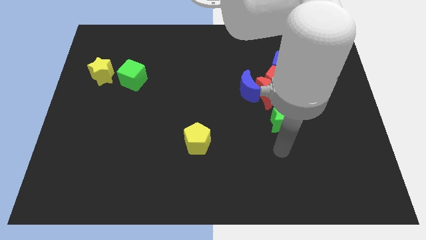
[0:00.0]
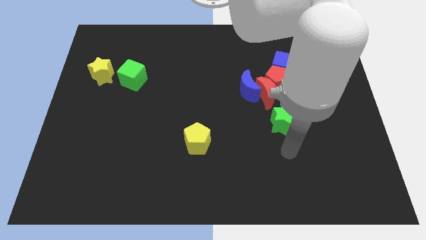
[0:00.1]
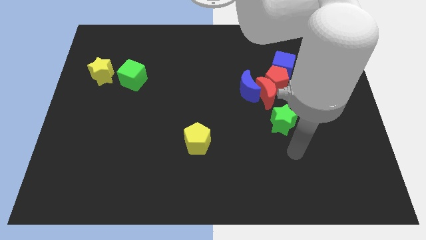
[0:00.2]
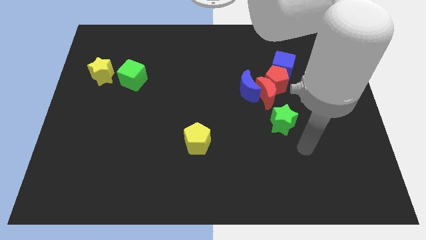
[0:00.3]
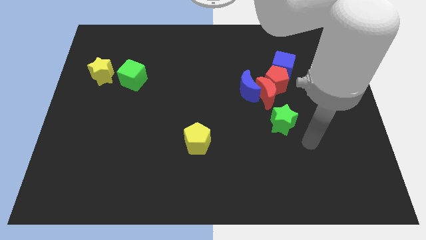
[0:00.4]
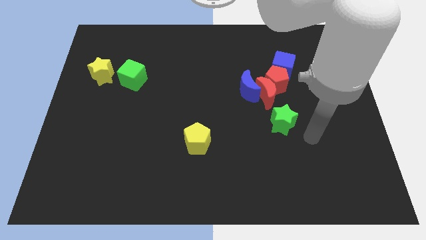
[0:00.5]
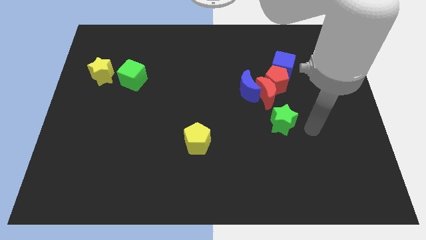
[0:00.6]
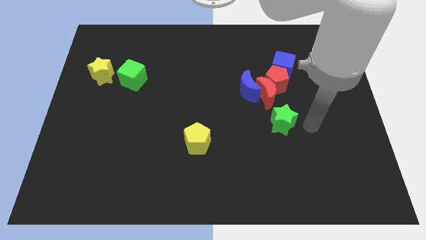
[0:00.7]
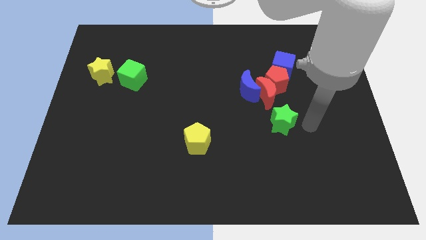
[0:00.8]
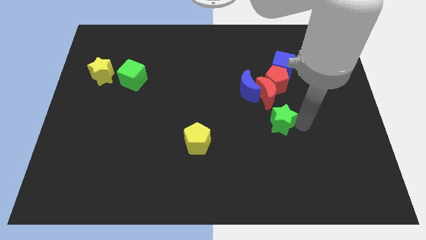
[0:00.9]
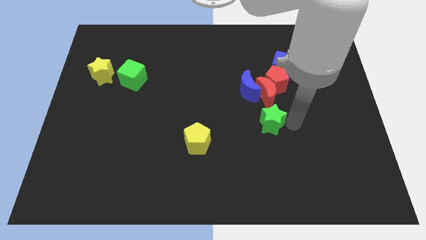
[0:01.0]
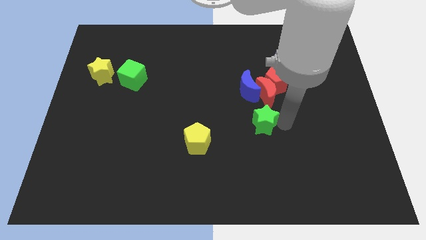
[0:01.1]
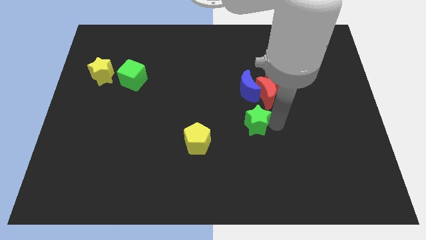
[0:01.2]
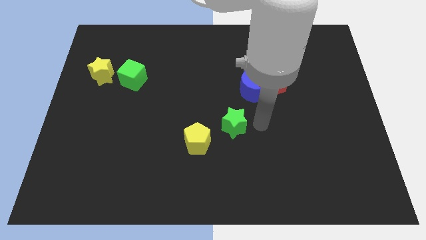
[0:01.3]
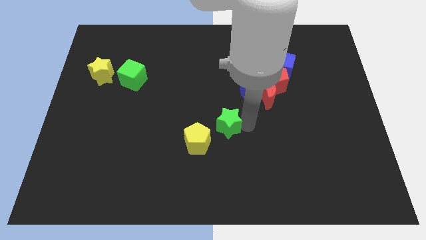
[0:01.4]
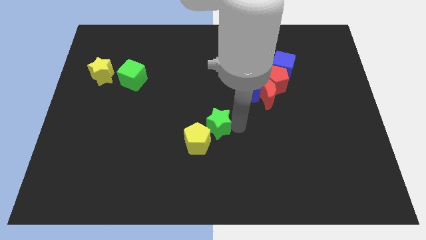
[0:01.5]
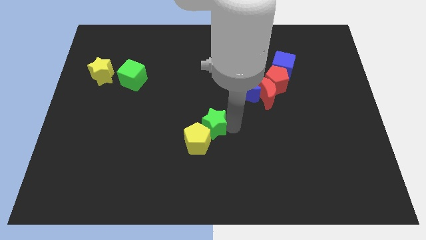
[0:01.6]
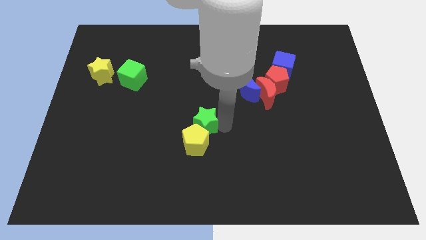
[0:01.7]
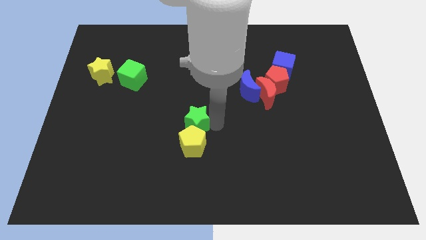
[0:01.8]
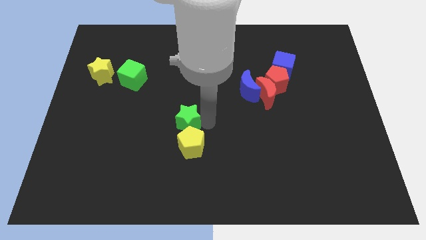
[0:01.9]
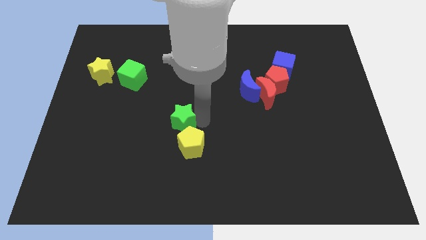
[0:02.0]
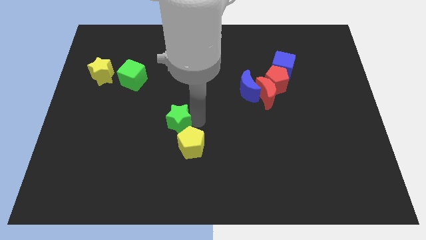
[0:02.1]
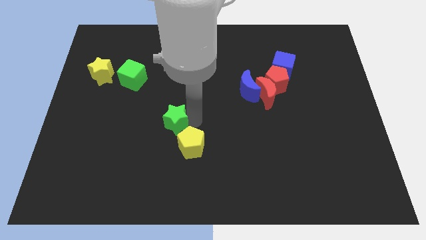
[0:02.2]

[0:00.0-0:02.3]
move the green star towards the top left of the yellow pentagon

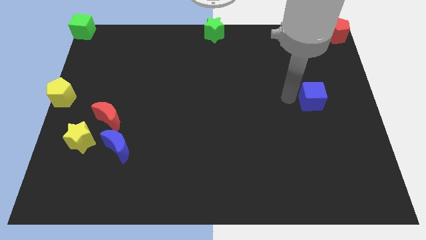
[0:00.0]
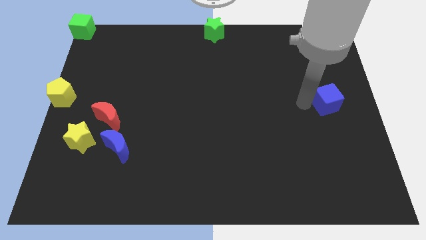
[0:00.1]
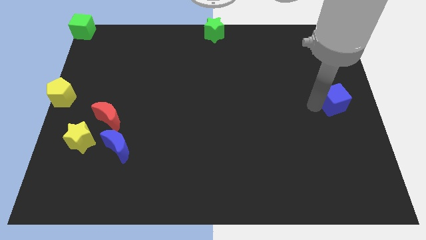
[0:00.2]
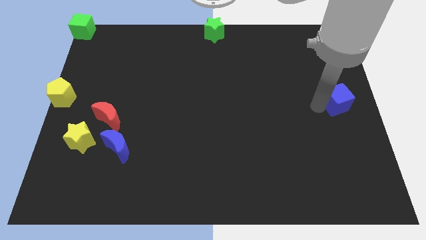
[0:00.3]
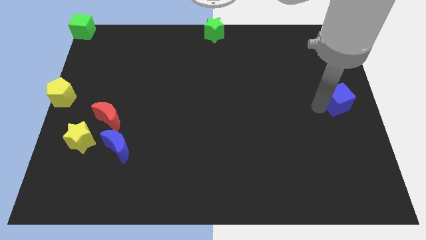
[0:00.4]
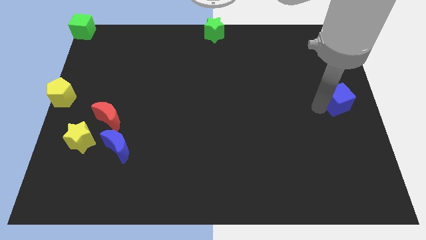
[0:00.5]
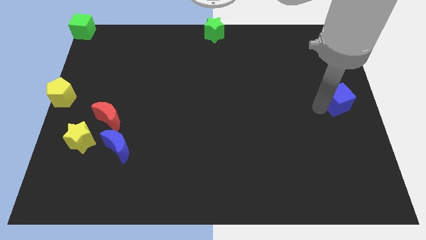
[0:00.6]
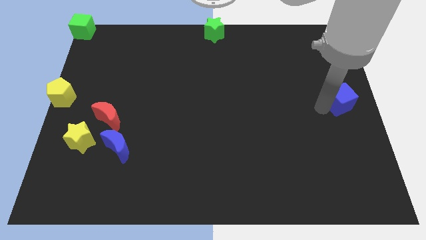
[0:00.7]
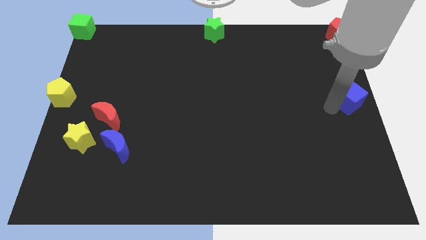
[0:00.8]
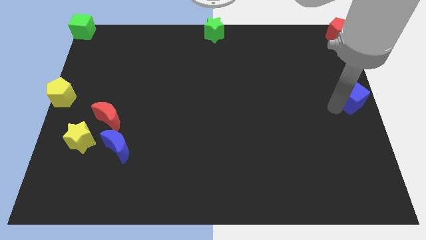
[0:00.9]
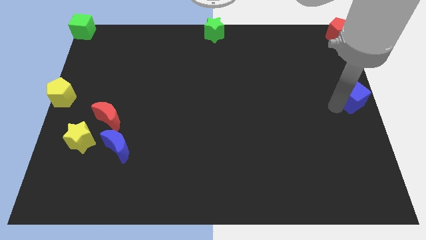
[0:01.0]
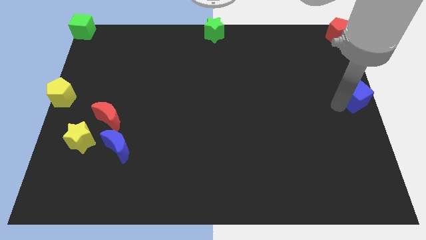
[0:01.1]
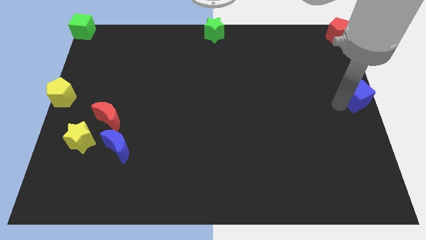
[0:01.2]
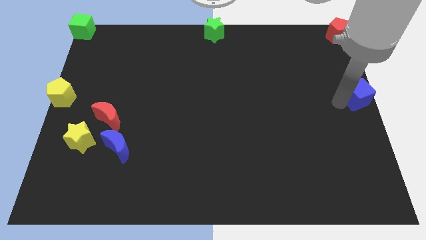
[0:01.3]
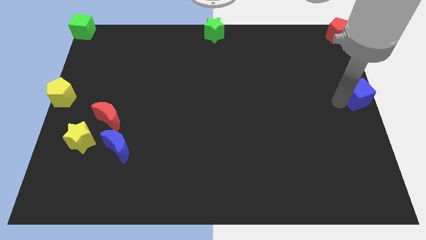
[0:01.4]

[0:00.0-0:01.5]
move the blue cube to the right center of the board

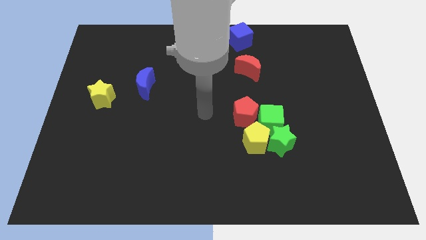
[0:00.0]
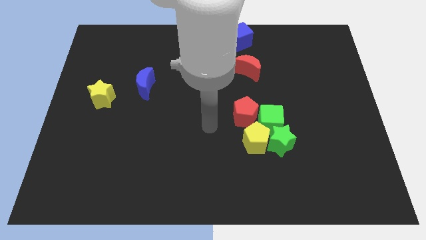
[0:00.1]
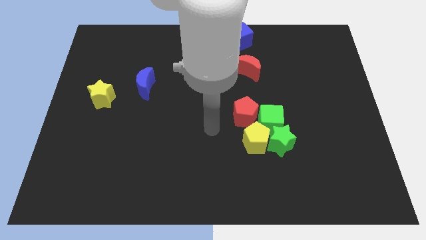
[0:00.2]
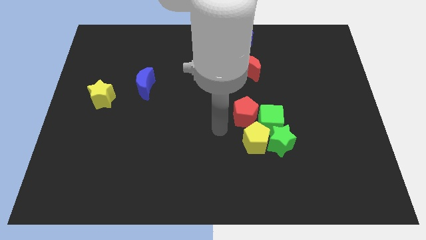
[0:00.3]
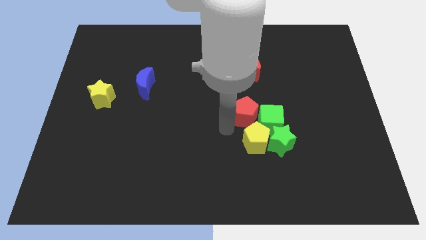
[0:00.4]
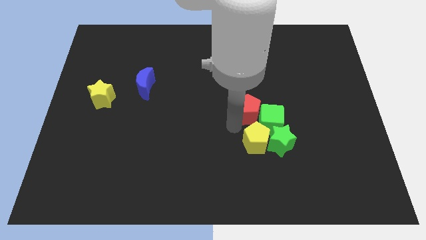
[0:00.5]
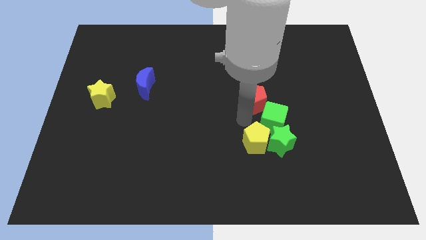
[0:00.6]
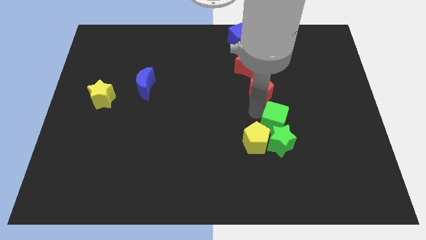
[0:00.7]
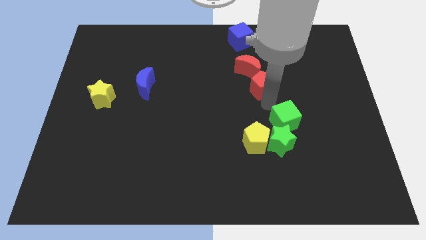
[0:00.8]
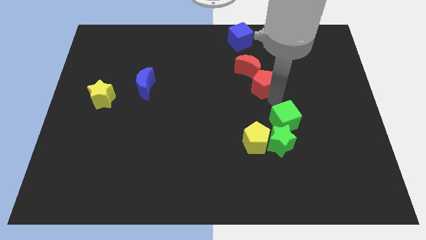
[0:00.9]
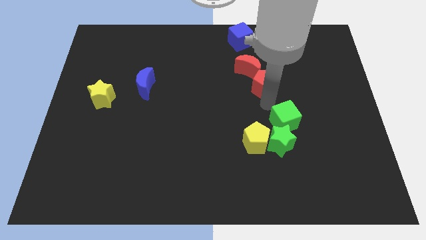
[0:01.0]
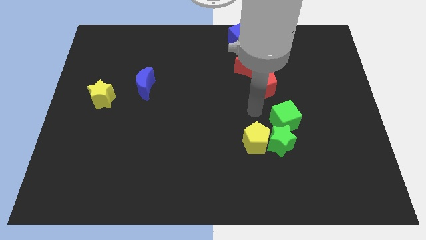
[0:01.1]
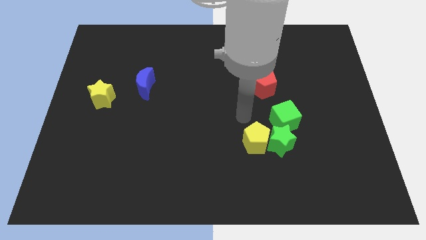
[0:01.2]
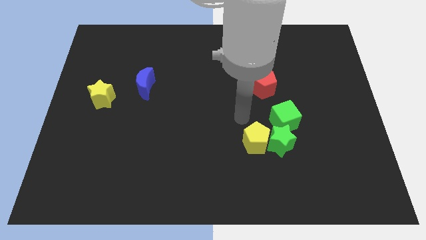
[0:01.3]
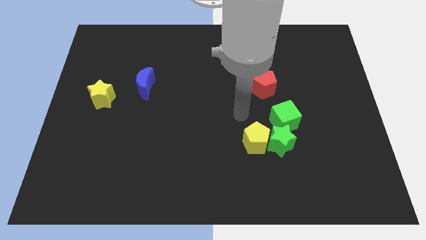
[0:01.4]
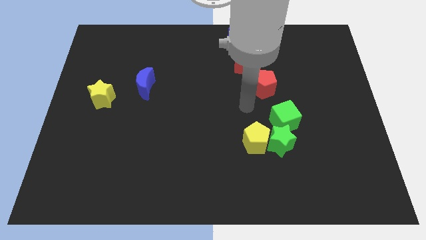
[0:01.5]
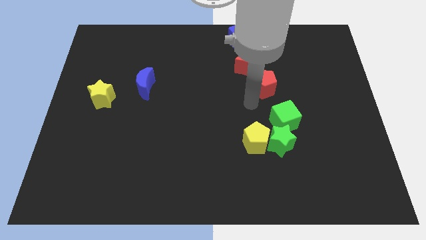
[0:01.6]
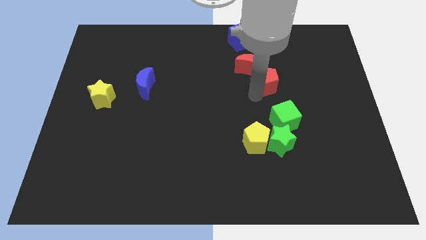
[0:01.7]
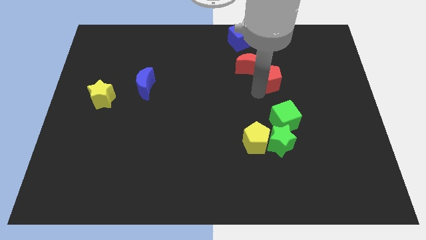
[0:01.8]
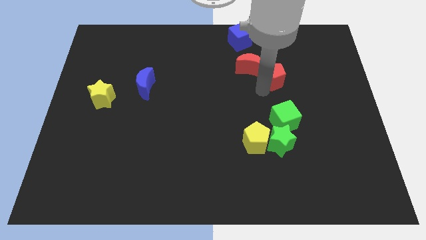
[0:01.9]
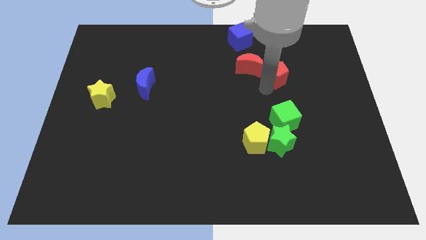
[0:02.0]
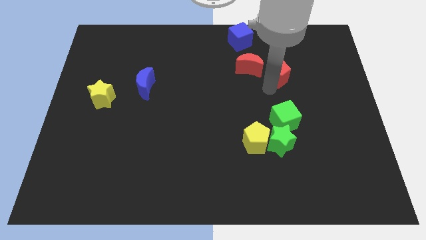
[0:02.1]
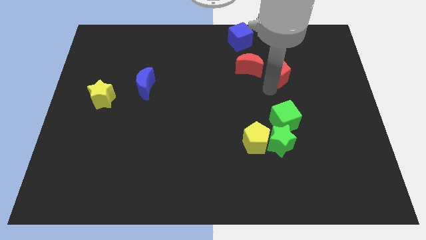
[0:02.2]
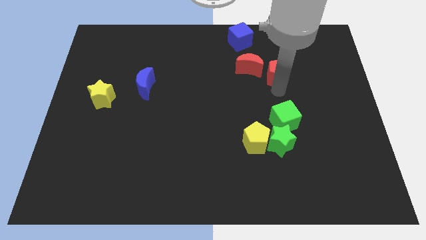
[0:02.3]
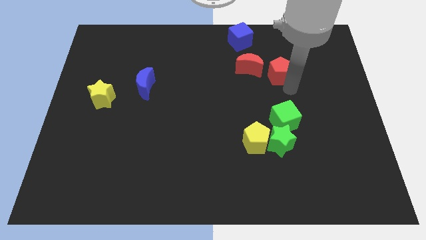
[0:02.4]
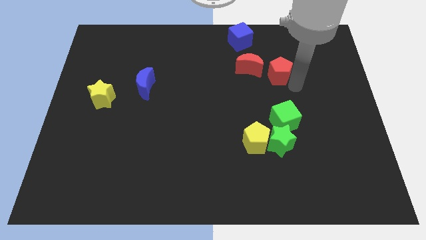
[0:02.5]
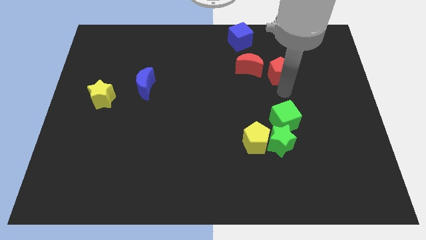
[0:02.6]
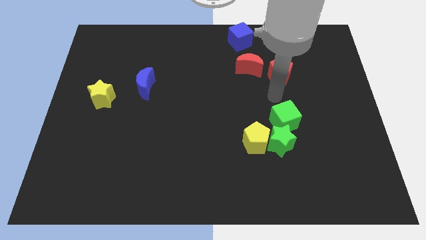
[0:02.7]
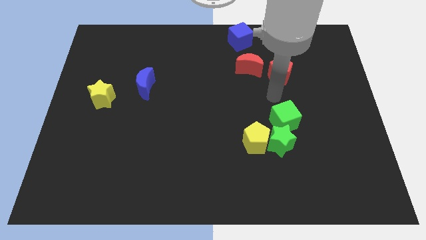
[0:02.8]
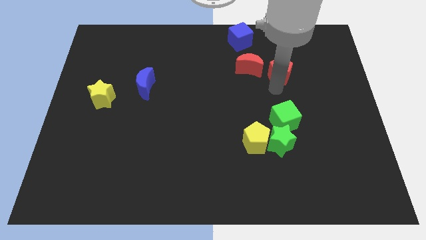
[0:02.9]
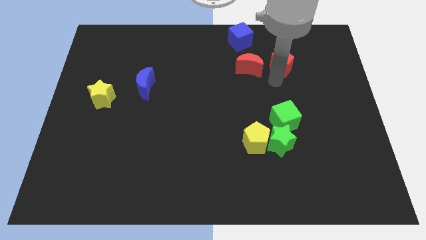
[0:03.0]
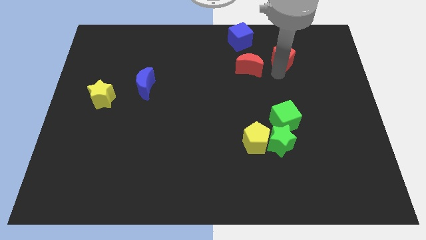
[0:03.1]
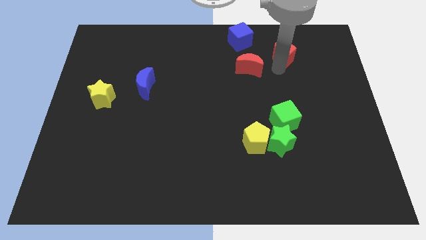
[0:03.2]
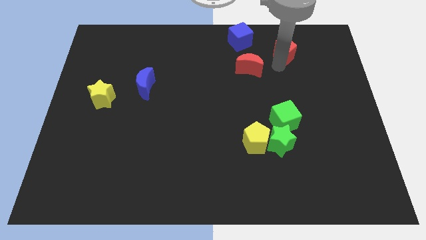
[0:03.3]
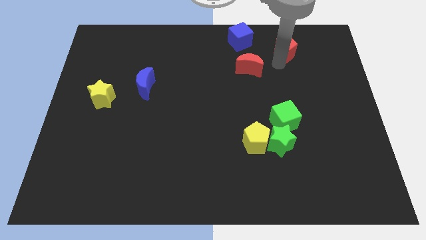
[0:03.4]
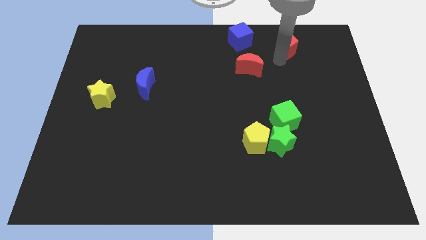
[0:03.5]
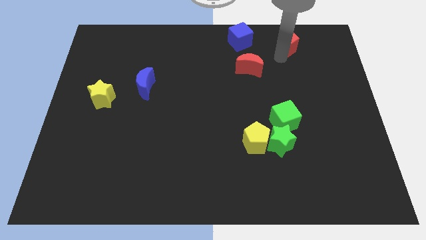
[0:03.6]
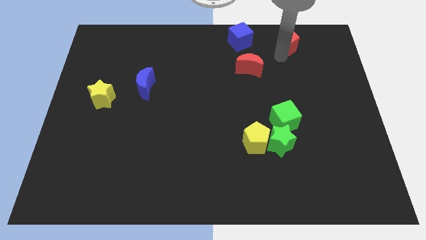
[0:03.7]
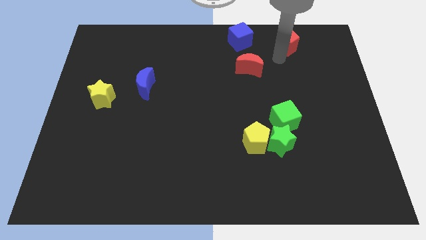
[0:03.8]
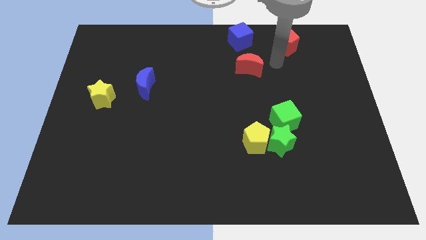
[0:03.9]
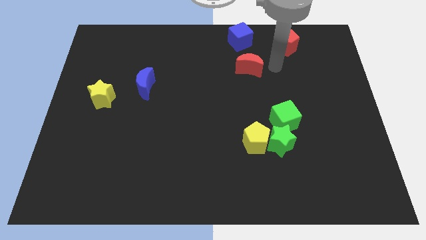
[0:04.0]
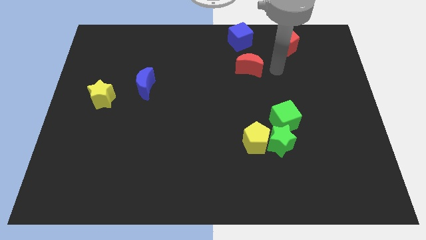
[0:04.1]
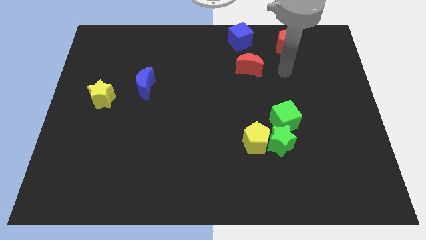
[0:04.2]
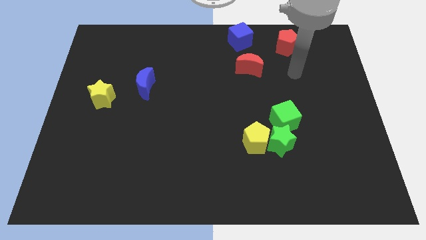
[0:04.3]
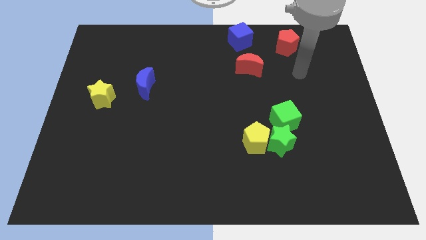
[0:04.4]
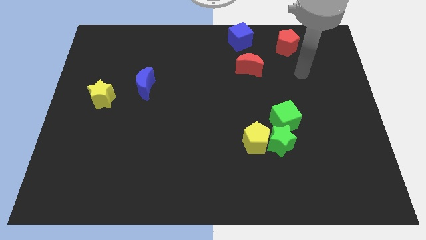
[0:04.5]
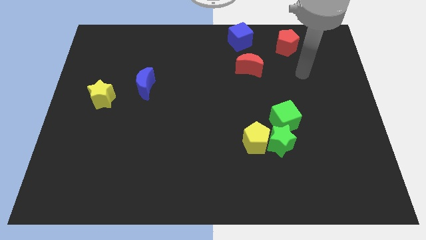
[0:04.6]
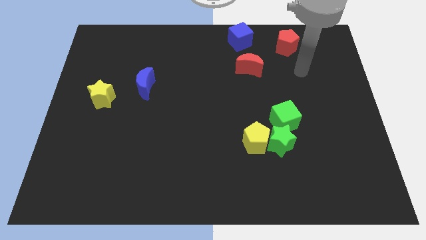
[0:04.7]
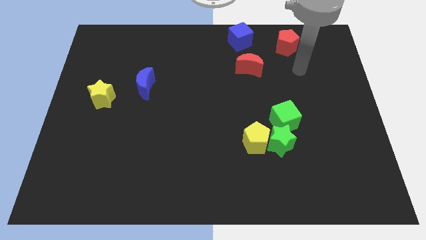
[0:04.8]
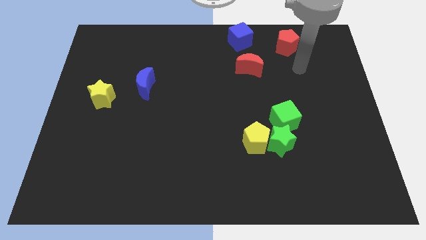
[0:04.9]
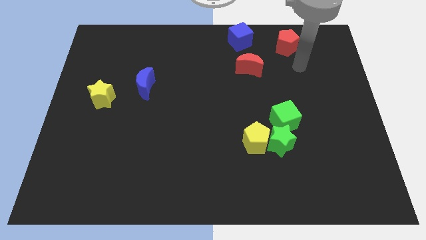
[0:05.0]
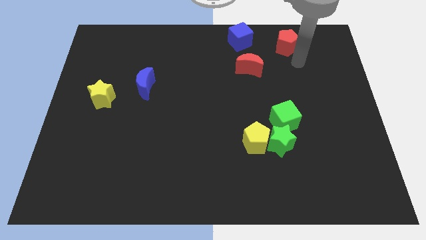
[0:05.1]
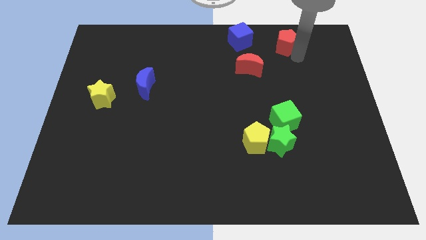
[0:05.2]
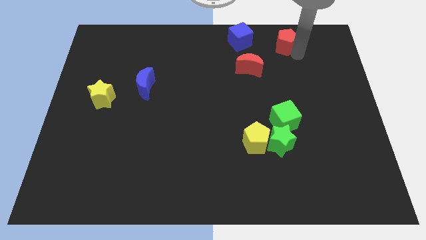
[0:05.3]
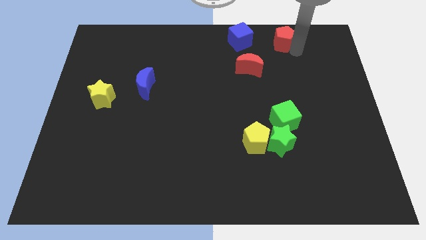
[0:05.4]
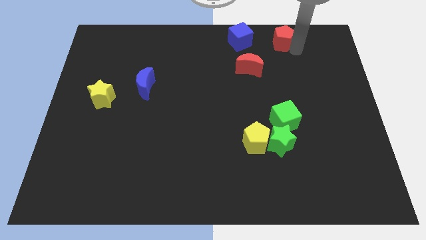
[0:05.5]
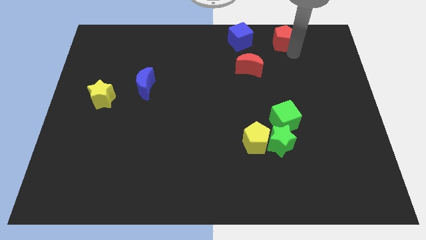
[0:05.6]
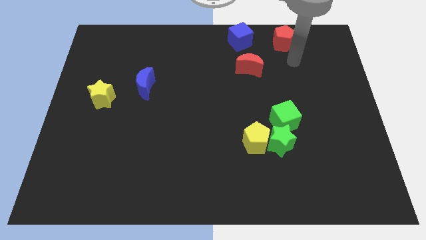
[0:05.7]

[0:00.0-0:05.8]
move the red pentagon to the horizontal right side of the blue cube
